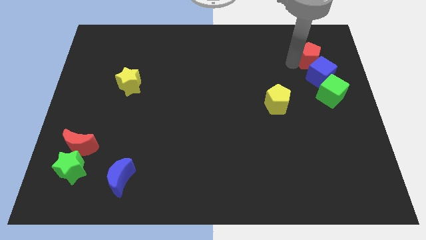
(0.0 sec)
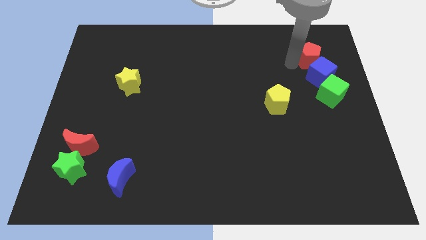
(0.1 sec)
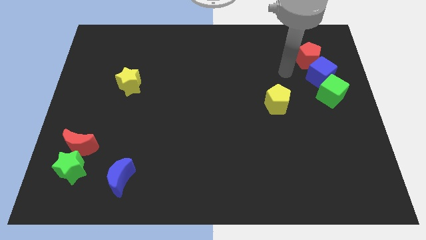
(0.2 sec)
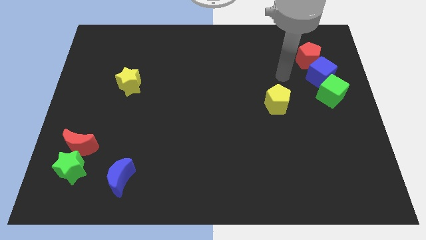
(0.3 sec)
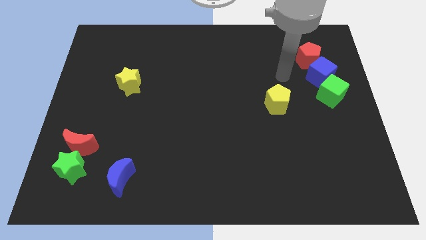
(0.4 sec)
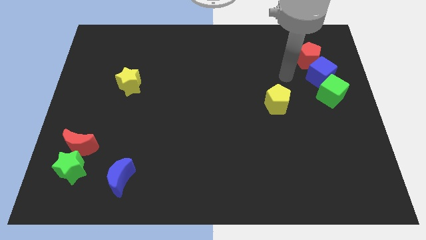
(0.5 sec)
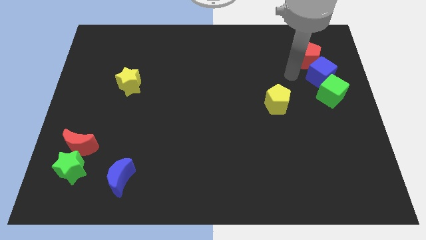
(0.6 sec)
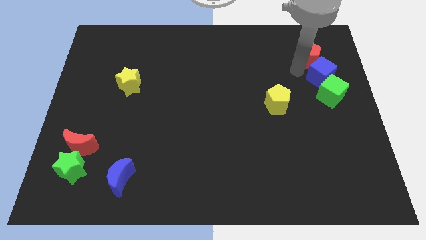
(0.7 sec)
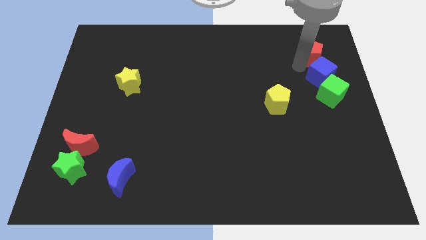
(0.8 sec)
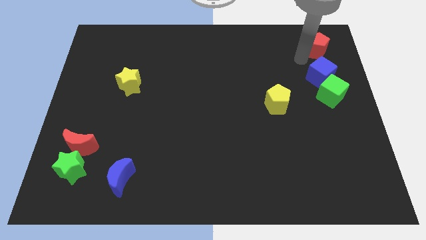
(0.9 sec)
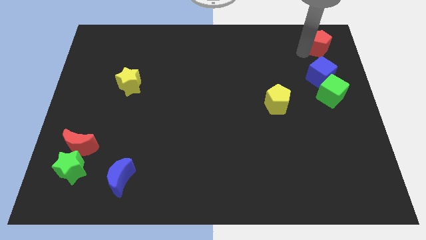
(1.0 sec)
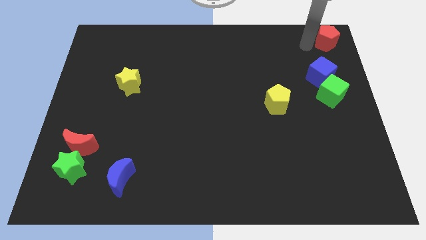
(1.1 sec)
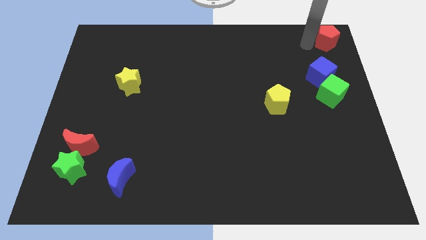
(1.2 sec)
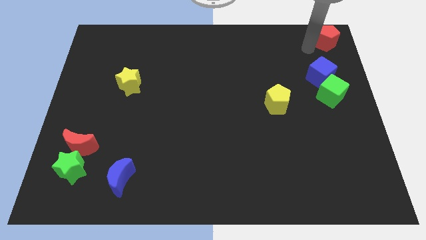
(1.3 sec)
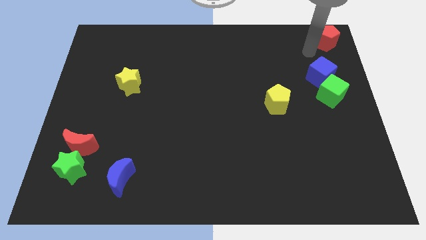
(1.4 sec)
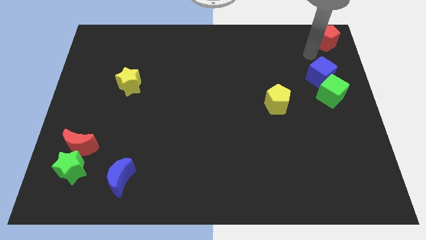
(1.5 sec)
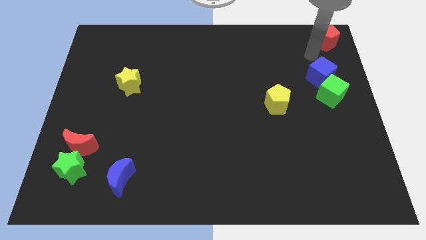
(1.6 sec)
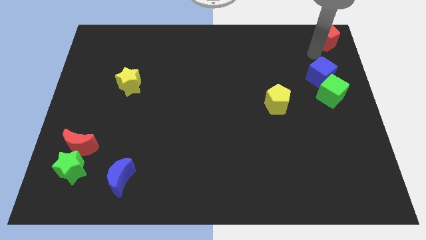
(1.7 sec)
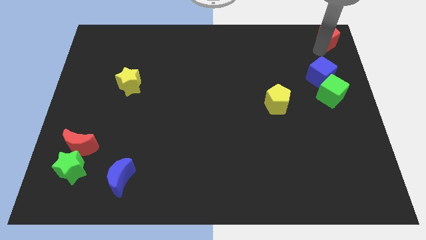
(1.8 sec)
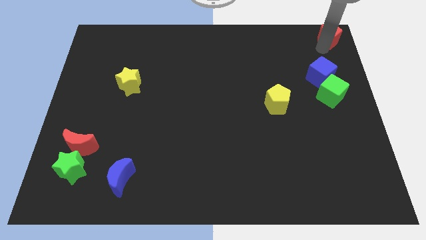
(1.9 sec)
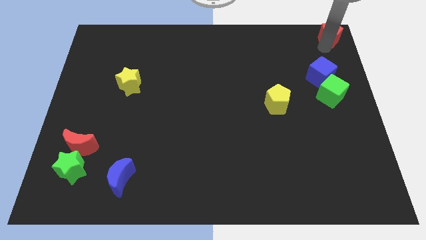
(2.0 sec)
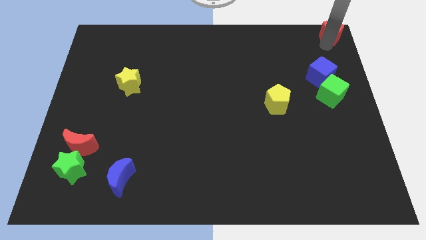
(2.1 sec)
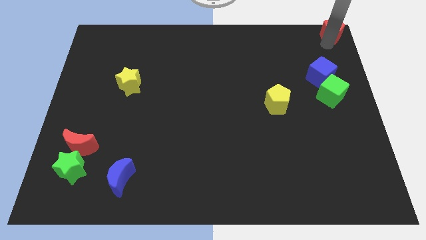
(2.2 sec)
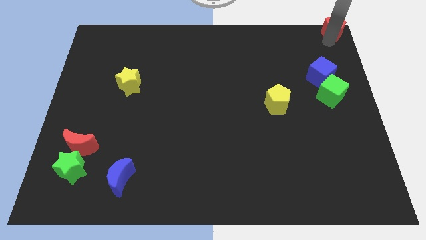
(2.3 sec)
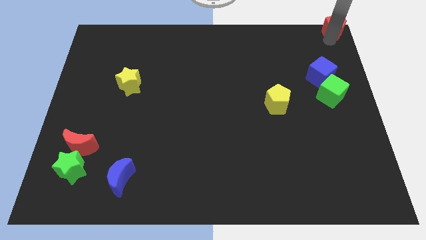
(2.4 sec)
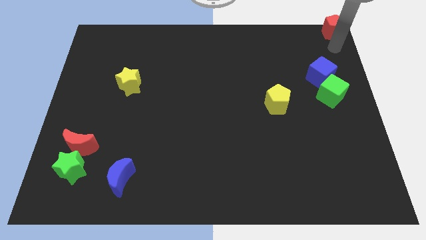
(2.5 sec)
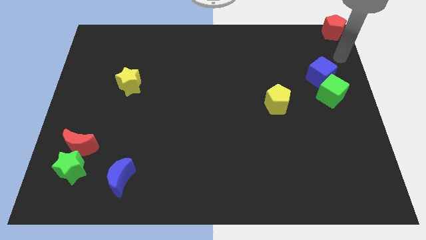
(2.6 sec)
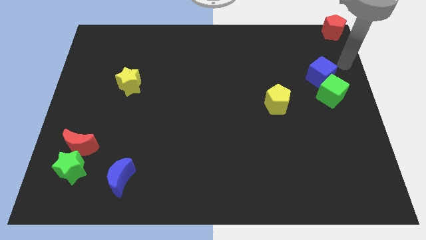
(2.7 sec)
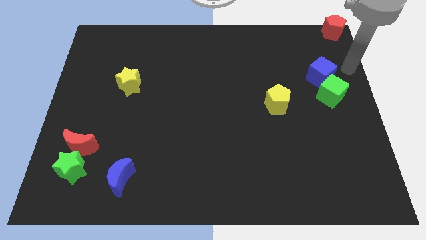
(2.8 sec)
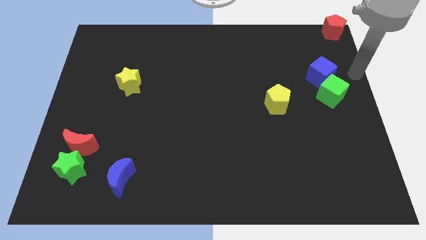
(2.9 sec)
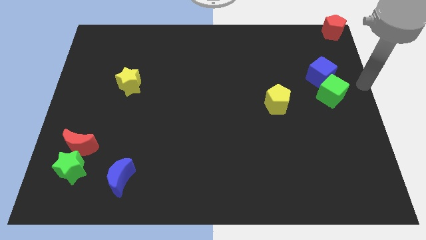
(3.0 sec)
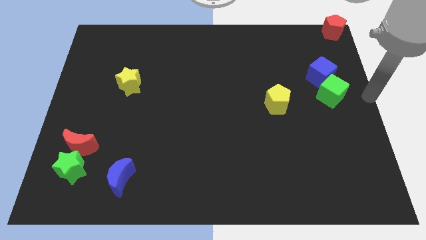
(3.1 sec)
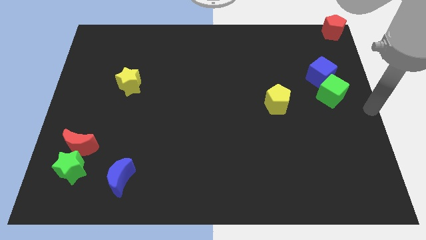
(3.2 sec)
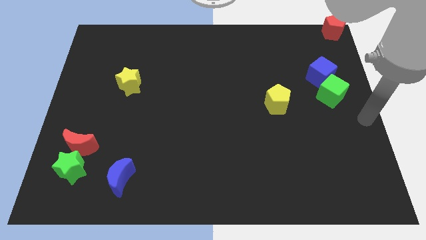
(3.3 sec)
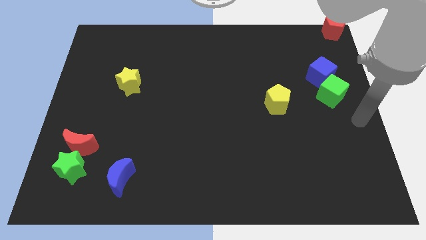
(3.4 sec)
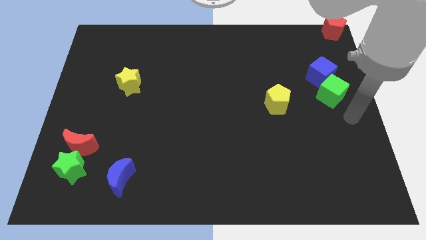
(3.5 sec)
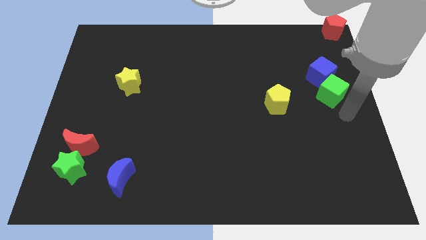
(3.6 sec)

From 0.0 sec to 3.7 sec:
push the red pentagon to the top right of the board

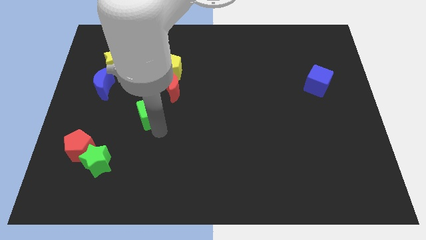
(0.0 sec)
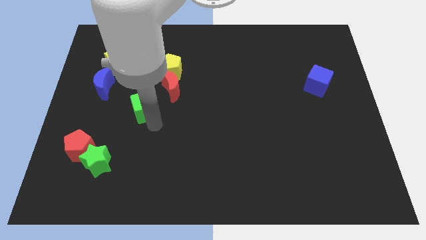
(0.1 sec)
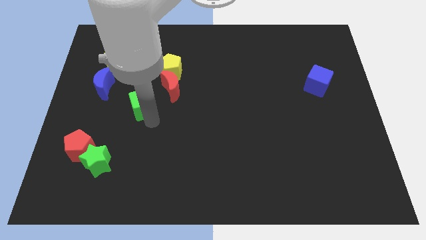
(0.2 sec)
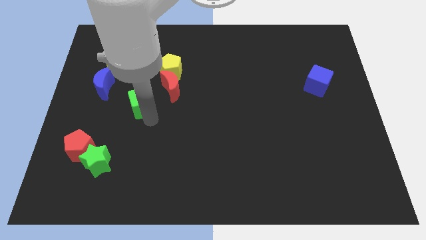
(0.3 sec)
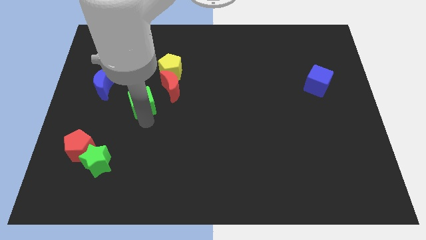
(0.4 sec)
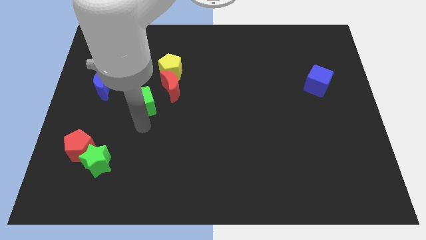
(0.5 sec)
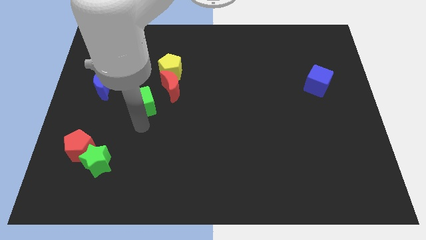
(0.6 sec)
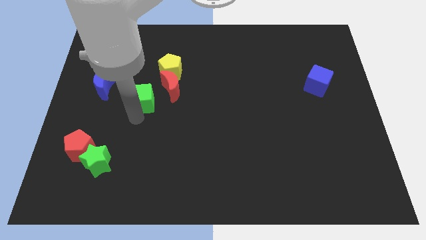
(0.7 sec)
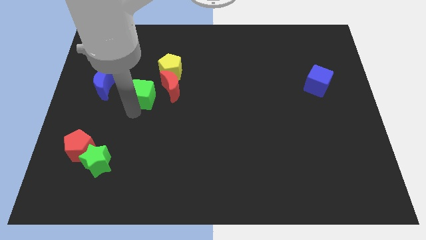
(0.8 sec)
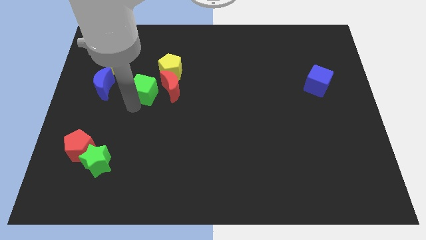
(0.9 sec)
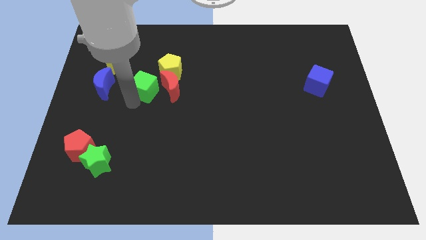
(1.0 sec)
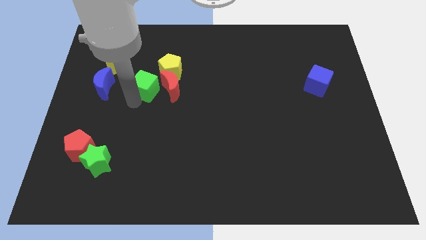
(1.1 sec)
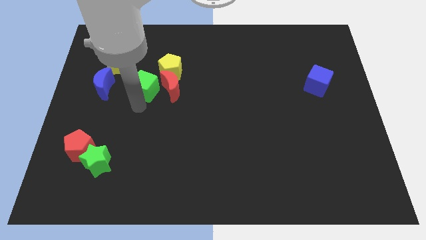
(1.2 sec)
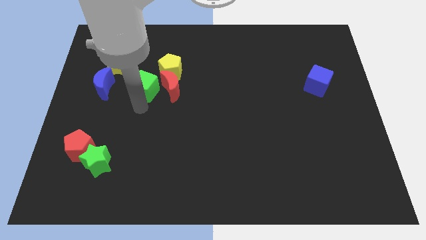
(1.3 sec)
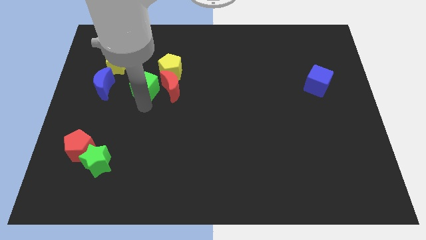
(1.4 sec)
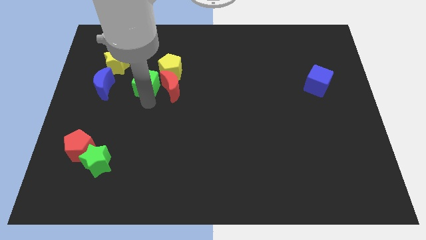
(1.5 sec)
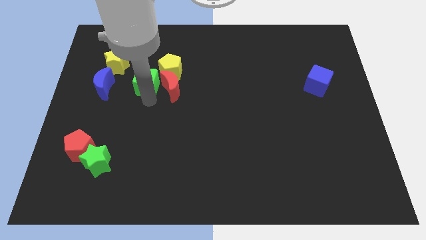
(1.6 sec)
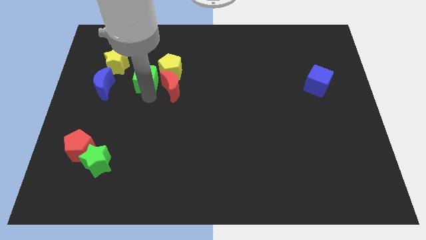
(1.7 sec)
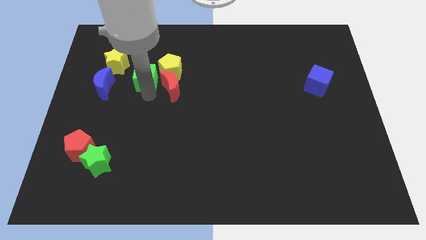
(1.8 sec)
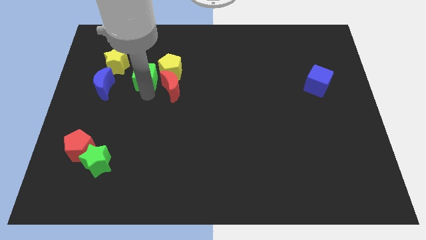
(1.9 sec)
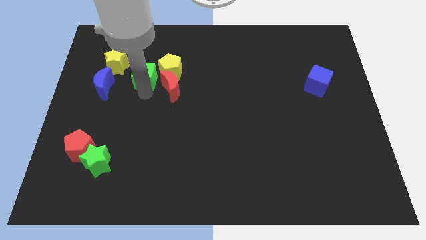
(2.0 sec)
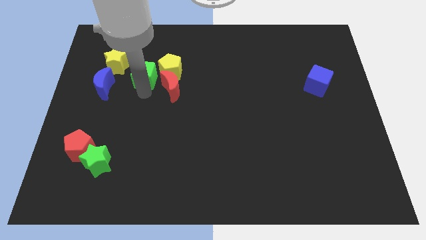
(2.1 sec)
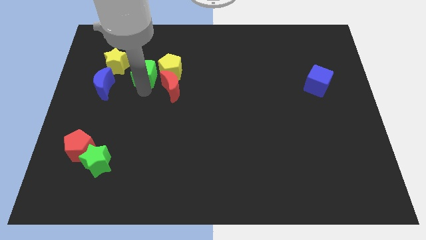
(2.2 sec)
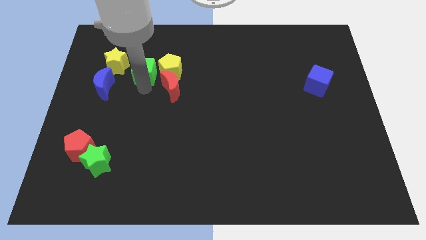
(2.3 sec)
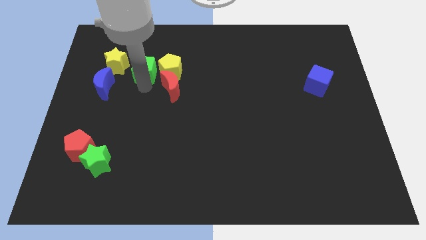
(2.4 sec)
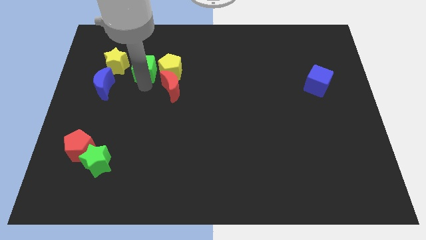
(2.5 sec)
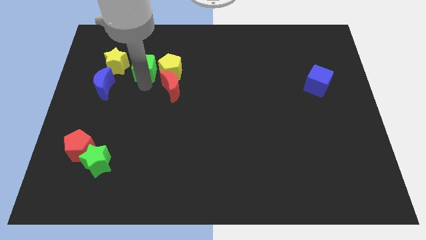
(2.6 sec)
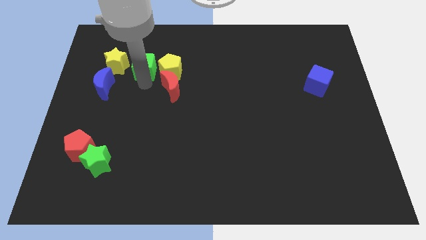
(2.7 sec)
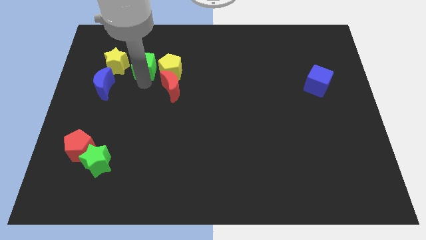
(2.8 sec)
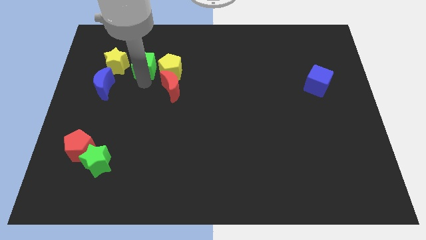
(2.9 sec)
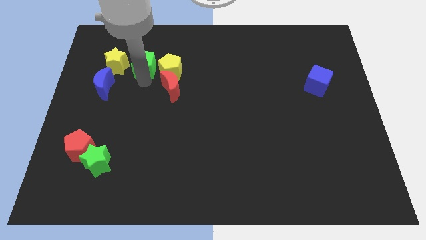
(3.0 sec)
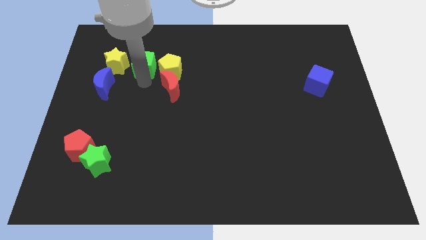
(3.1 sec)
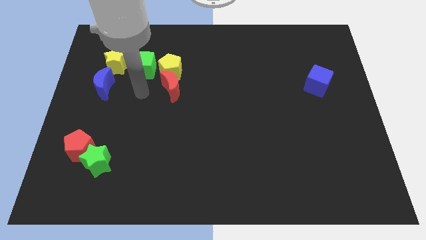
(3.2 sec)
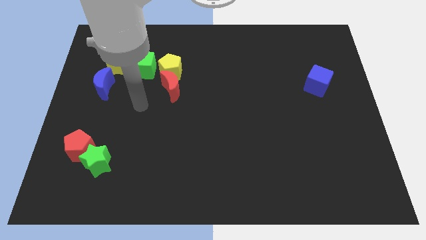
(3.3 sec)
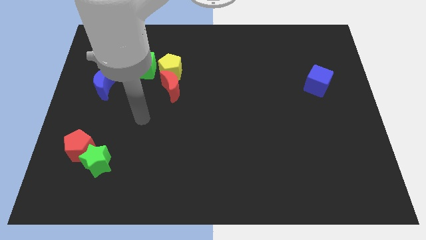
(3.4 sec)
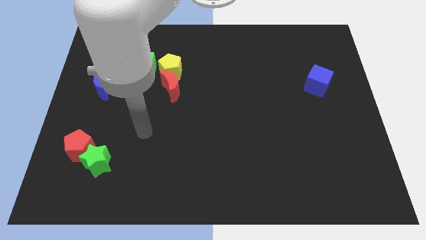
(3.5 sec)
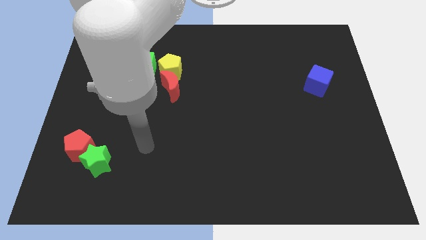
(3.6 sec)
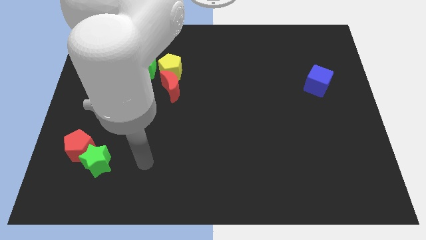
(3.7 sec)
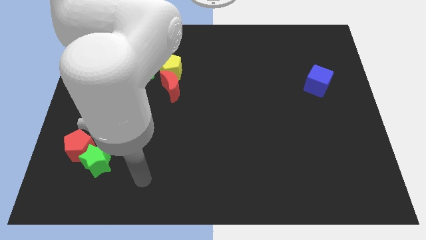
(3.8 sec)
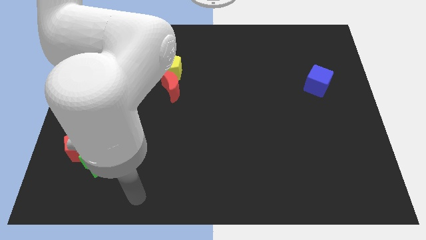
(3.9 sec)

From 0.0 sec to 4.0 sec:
place green cube in between the yellow blocks

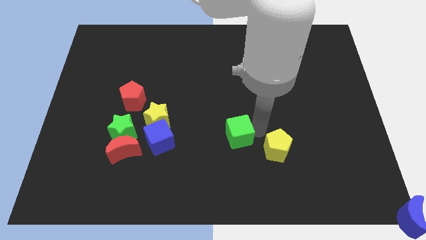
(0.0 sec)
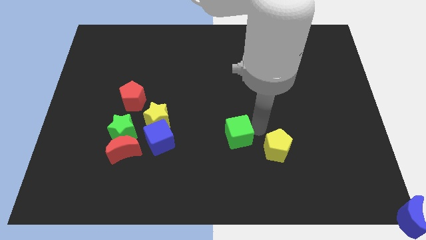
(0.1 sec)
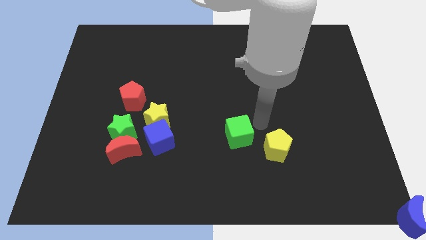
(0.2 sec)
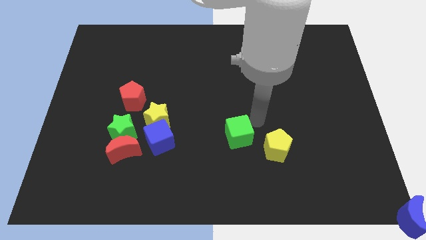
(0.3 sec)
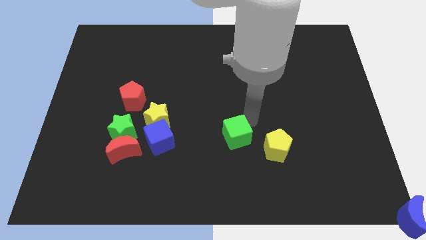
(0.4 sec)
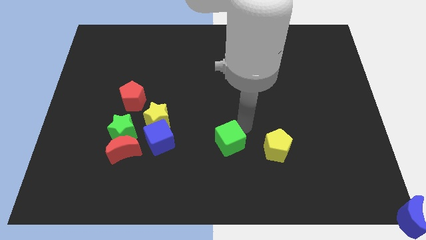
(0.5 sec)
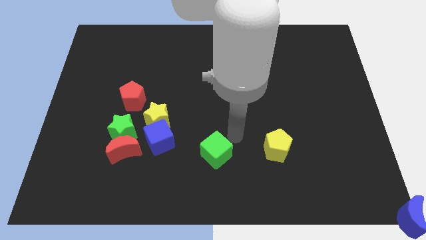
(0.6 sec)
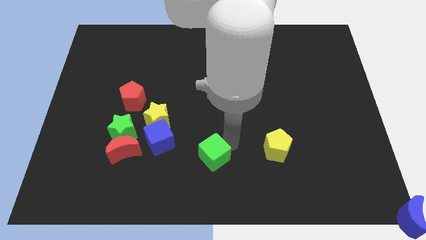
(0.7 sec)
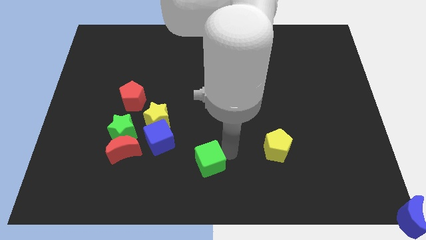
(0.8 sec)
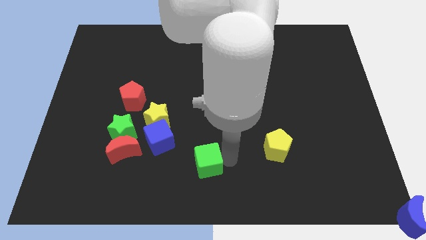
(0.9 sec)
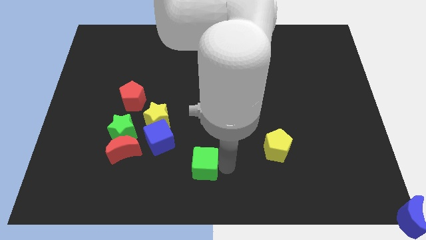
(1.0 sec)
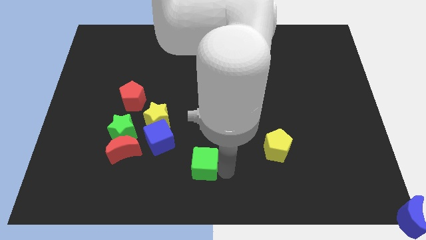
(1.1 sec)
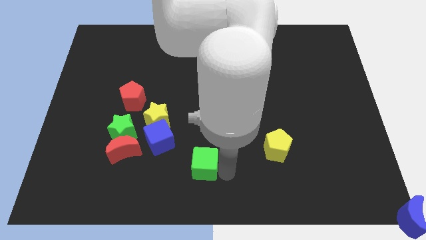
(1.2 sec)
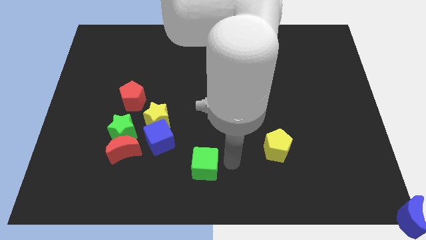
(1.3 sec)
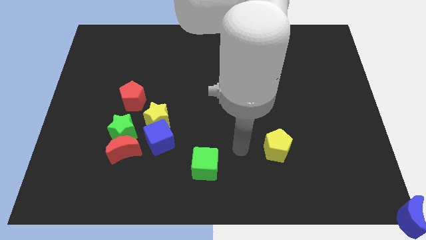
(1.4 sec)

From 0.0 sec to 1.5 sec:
move the green cube parallel to the left of the yellow pentagon
